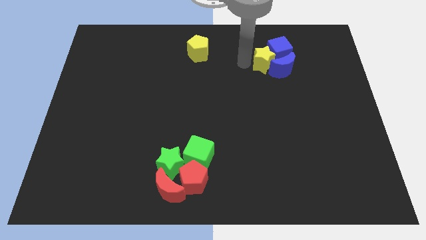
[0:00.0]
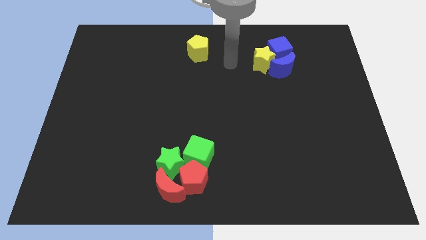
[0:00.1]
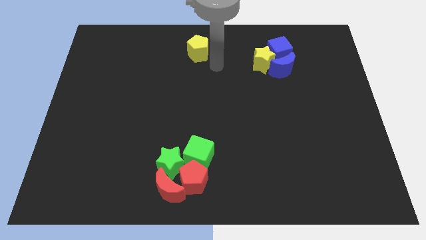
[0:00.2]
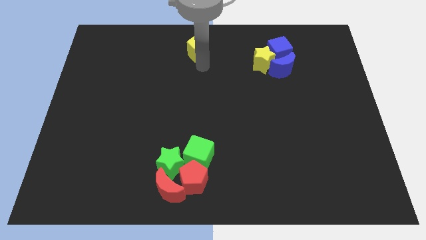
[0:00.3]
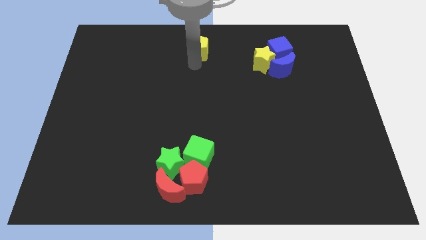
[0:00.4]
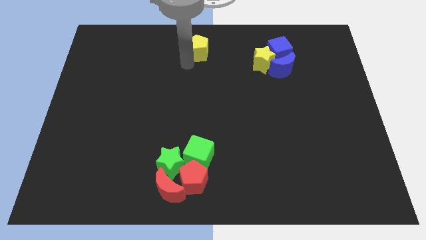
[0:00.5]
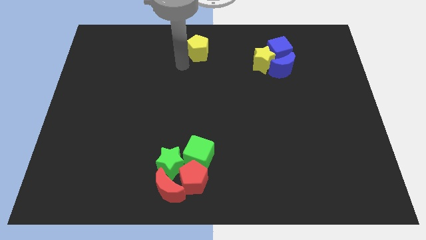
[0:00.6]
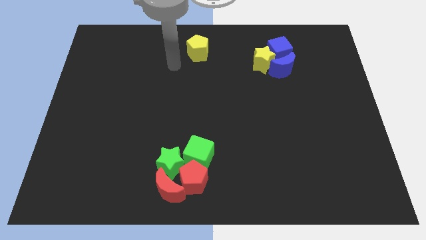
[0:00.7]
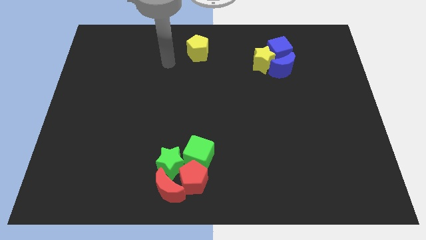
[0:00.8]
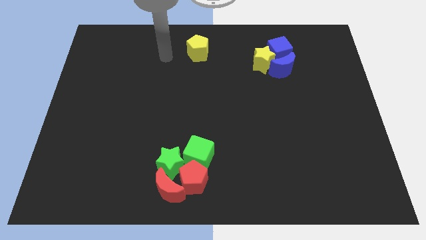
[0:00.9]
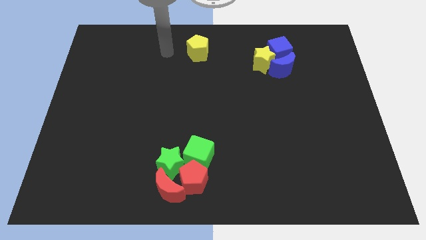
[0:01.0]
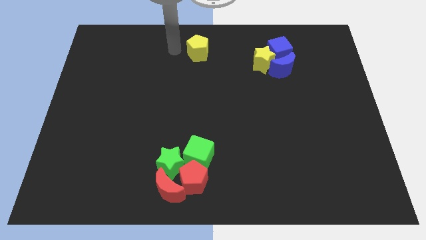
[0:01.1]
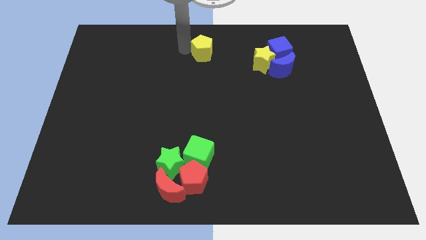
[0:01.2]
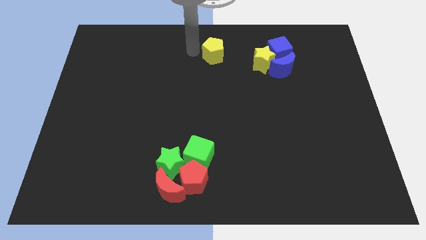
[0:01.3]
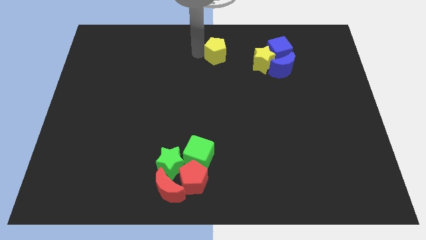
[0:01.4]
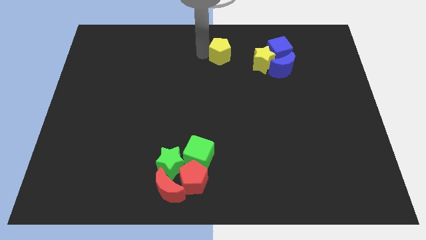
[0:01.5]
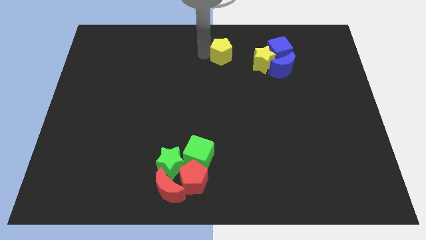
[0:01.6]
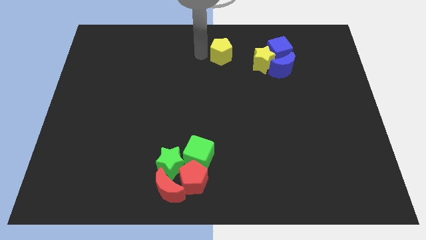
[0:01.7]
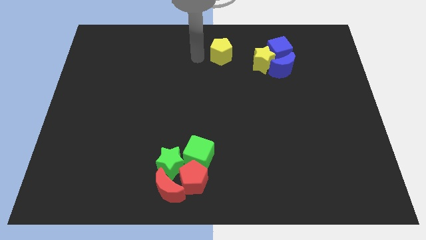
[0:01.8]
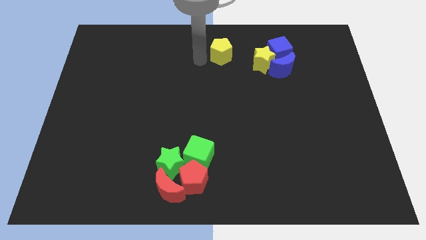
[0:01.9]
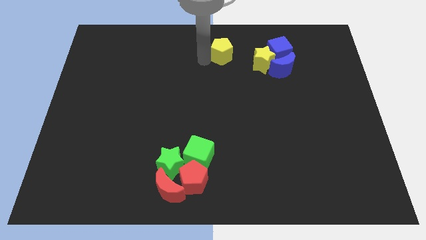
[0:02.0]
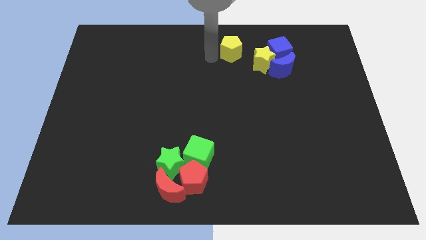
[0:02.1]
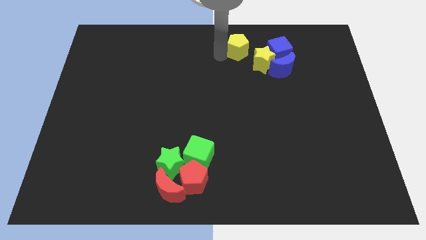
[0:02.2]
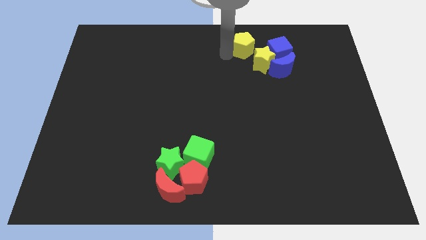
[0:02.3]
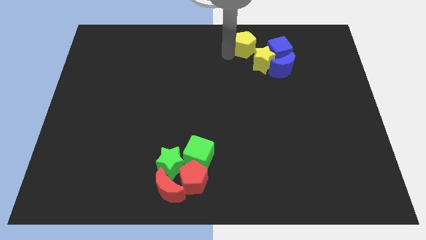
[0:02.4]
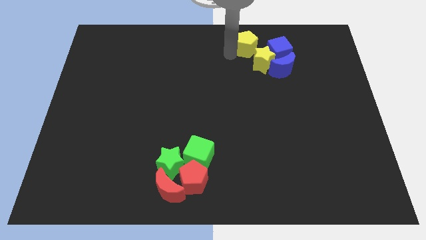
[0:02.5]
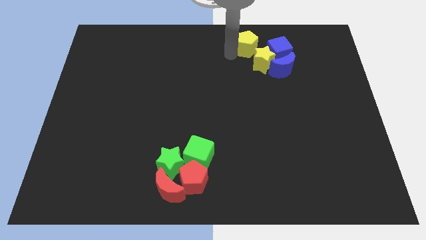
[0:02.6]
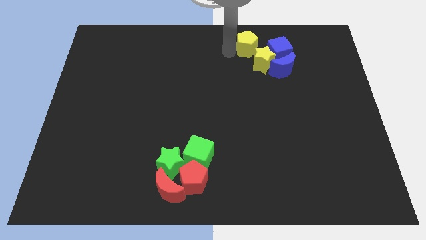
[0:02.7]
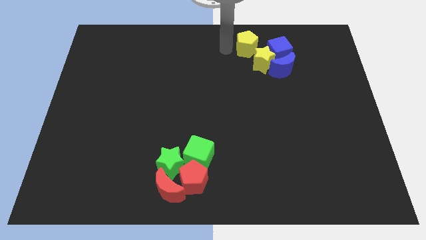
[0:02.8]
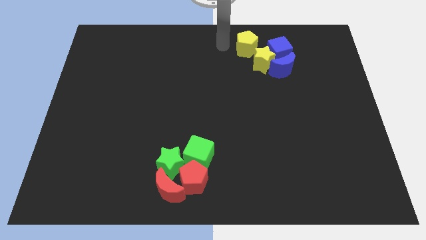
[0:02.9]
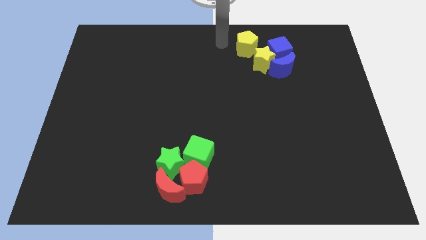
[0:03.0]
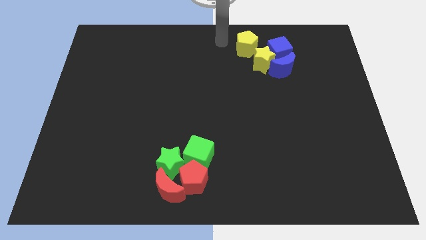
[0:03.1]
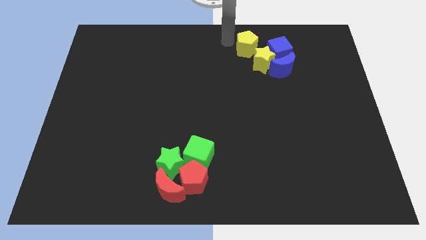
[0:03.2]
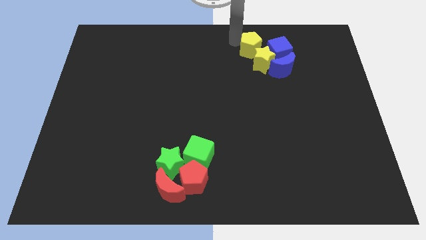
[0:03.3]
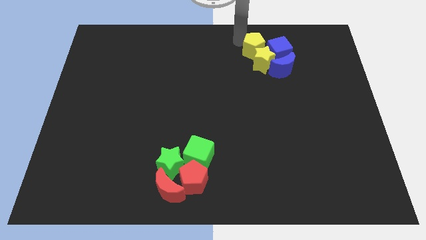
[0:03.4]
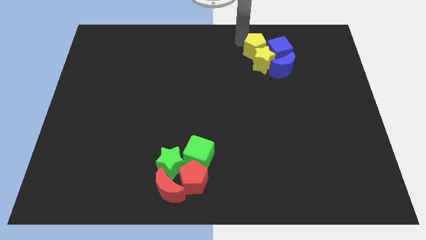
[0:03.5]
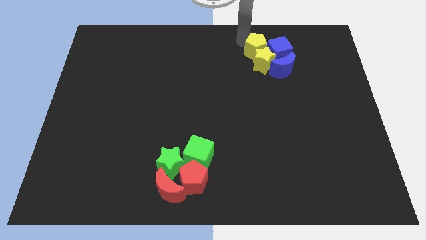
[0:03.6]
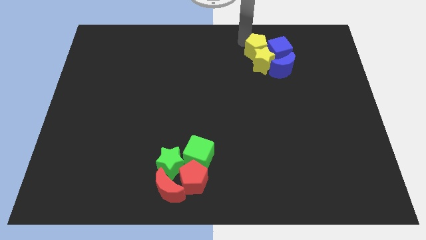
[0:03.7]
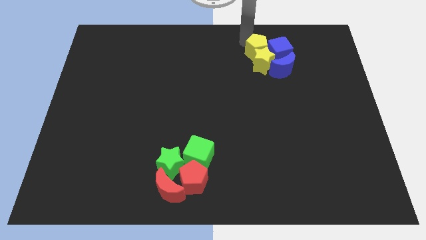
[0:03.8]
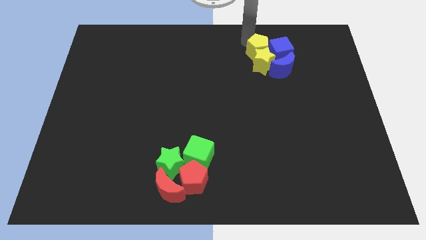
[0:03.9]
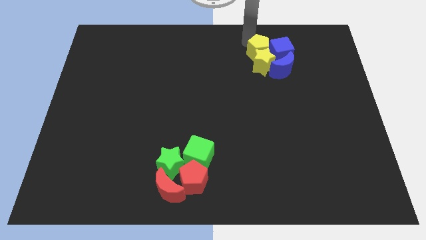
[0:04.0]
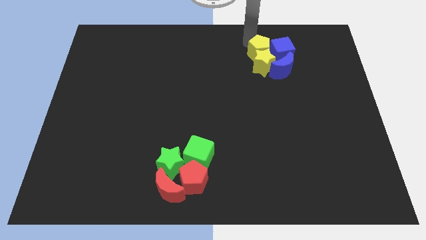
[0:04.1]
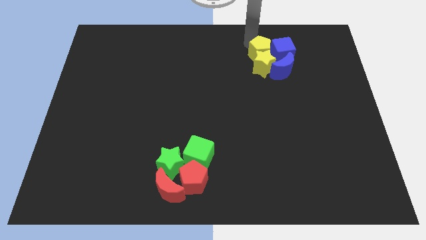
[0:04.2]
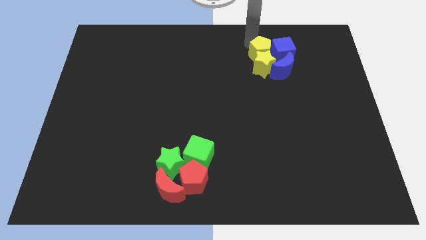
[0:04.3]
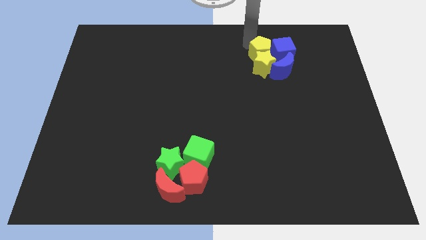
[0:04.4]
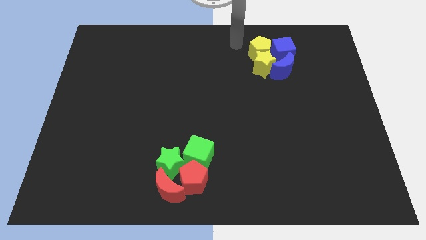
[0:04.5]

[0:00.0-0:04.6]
move the yellow pentagon at the top of yellow star

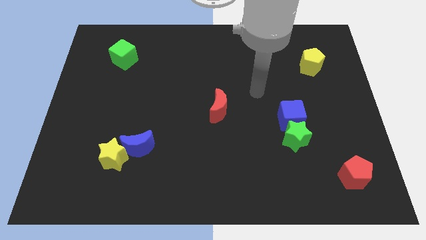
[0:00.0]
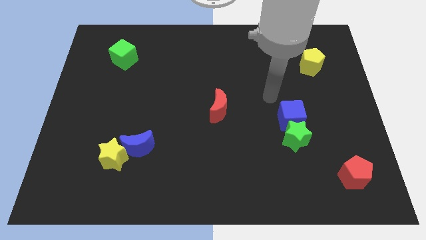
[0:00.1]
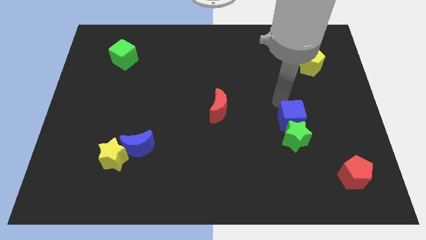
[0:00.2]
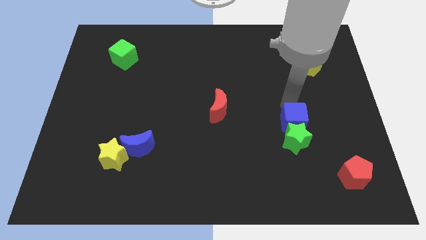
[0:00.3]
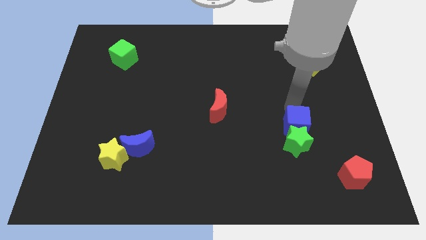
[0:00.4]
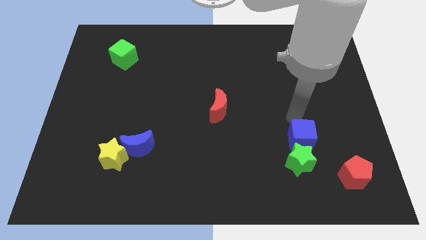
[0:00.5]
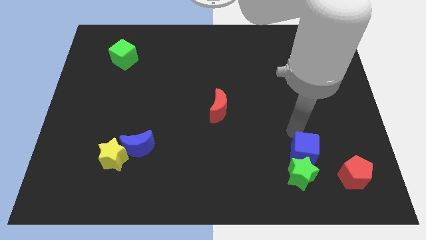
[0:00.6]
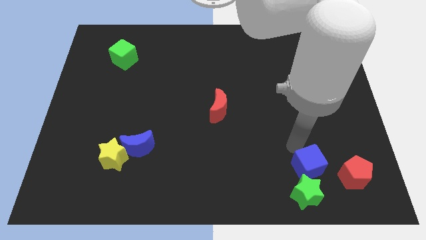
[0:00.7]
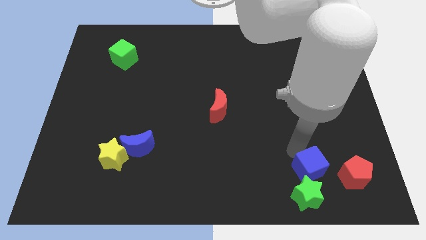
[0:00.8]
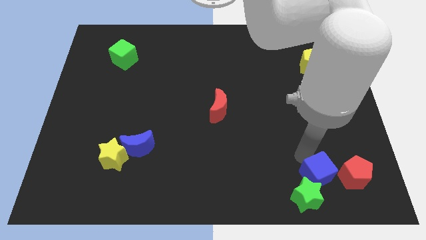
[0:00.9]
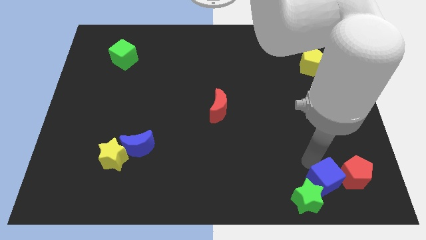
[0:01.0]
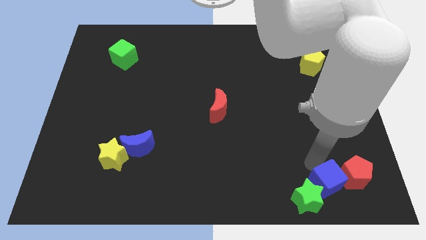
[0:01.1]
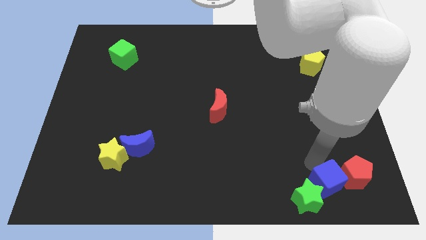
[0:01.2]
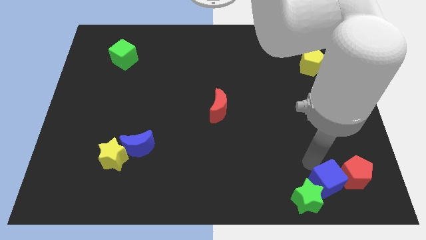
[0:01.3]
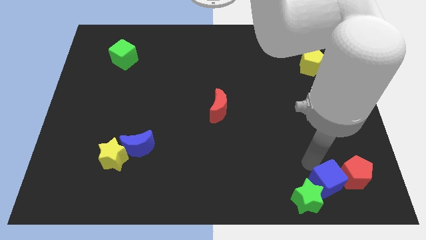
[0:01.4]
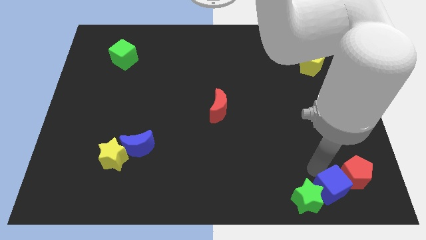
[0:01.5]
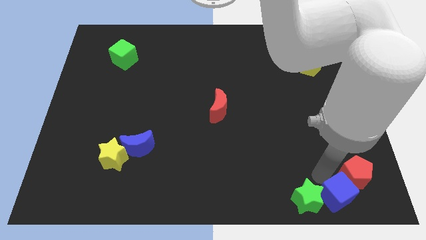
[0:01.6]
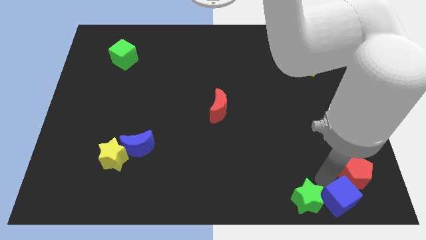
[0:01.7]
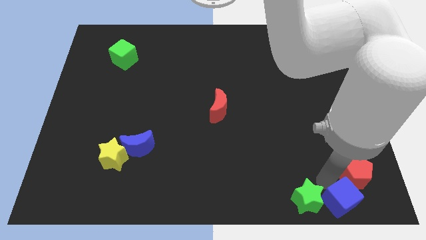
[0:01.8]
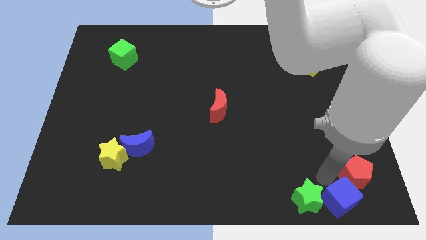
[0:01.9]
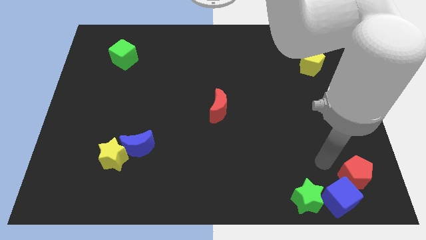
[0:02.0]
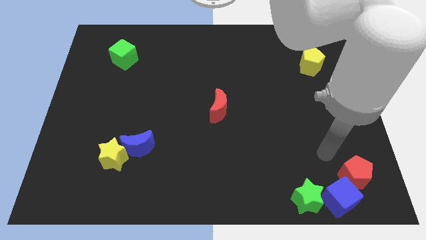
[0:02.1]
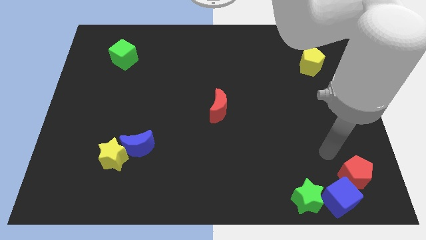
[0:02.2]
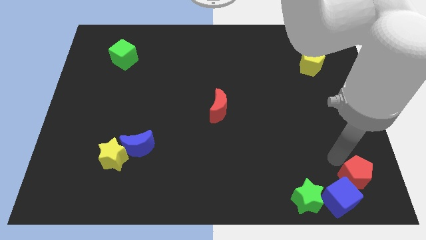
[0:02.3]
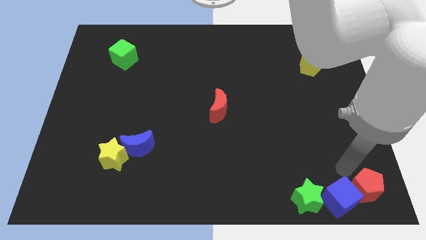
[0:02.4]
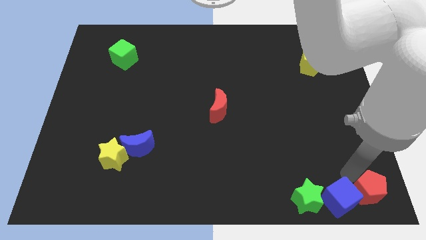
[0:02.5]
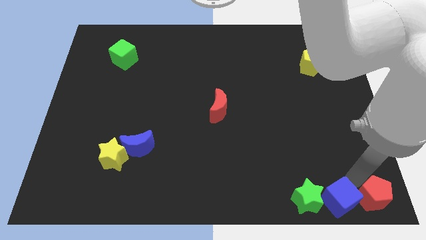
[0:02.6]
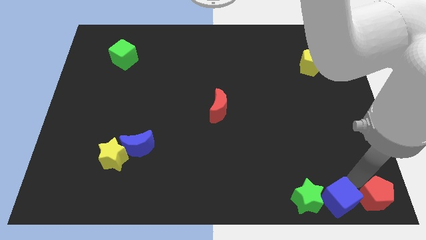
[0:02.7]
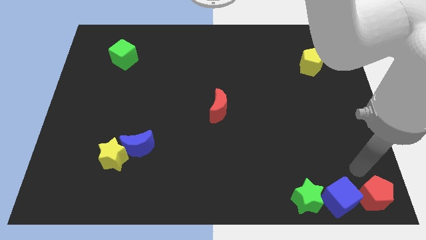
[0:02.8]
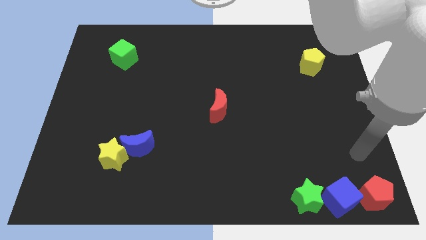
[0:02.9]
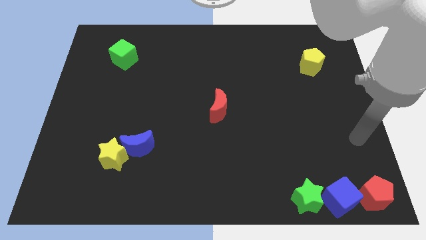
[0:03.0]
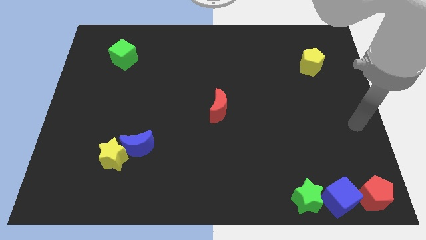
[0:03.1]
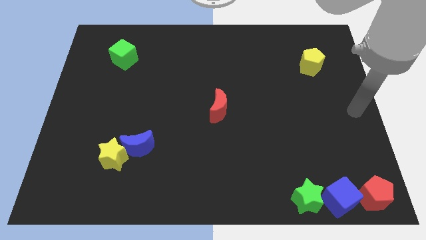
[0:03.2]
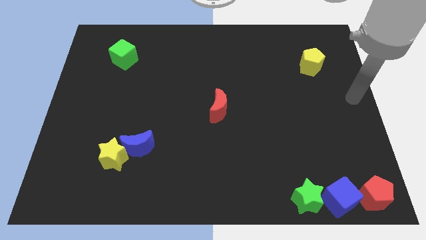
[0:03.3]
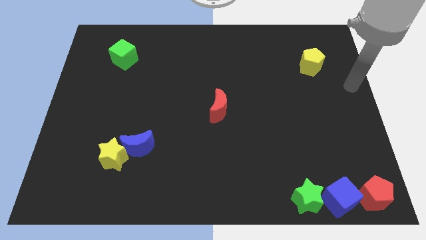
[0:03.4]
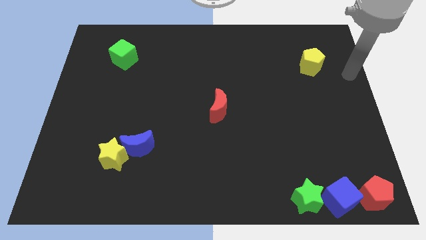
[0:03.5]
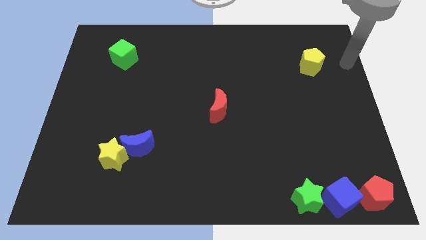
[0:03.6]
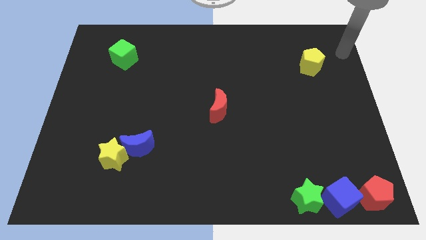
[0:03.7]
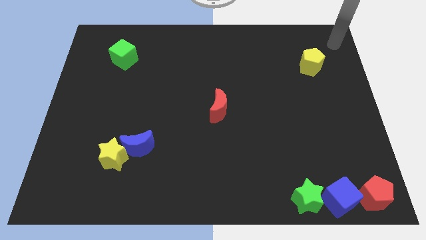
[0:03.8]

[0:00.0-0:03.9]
push the green star and the blue cube towards the red pentagon

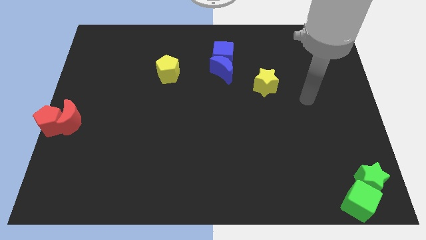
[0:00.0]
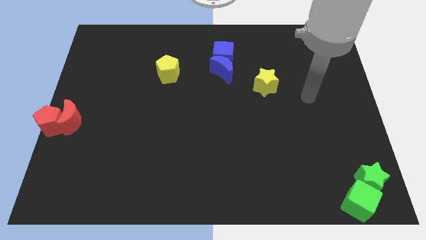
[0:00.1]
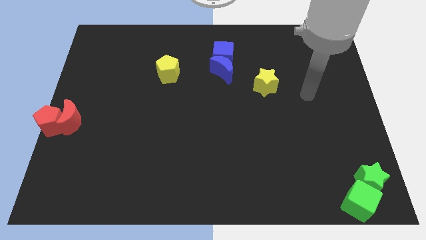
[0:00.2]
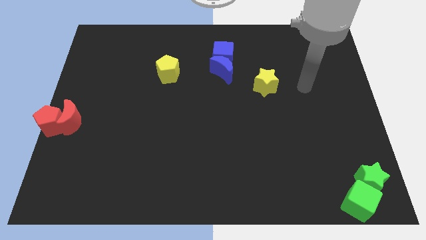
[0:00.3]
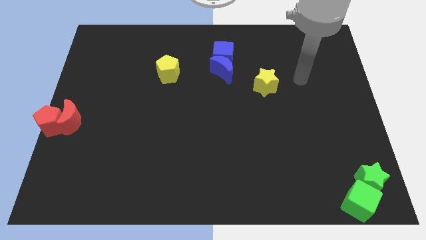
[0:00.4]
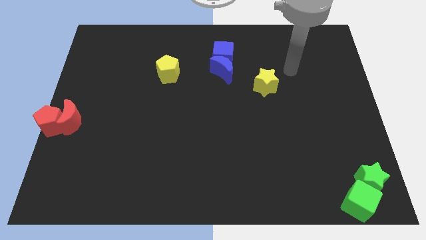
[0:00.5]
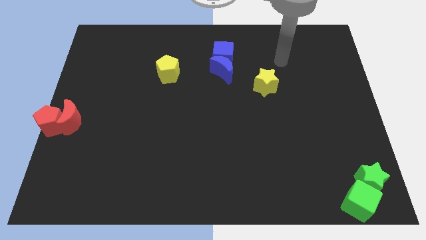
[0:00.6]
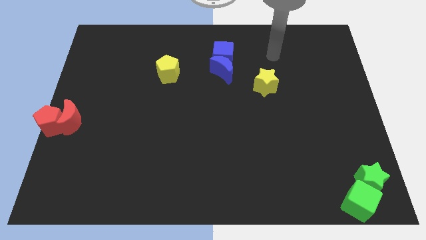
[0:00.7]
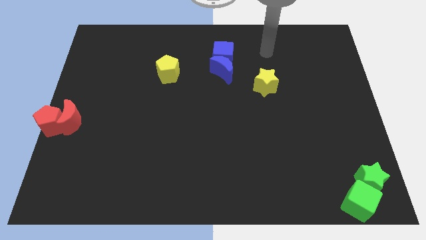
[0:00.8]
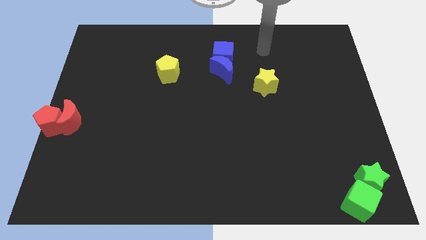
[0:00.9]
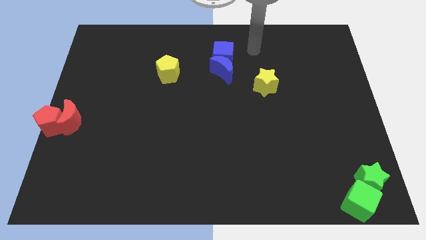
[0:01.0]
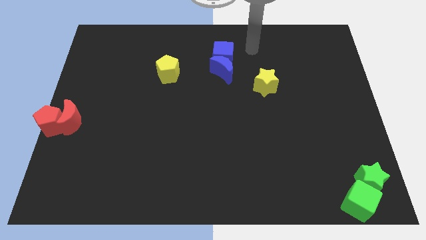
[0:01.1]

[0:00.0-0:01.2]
move your arm towards the blue cube at the right side
